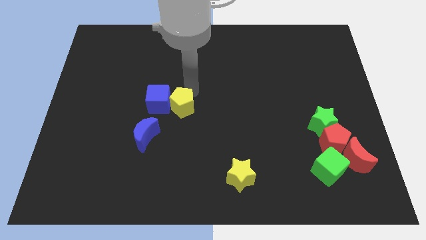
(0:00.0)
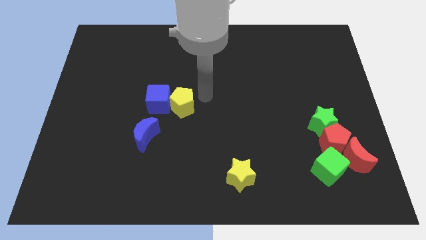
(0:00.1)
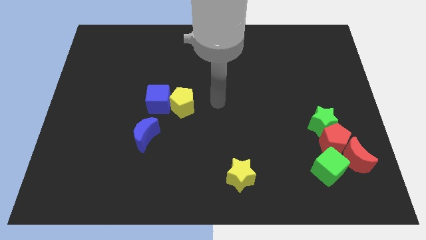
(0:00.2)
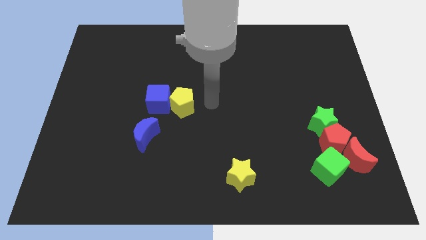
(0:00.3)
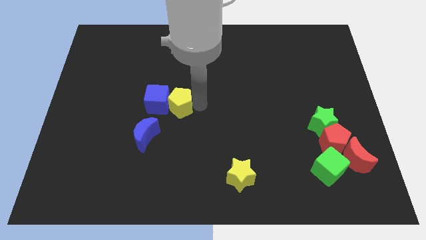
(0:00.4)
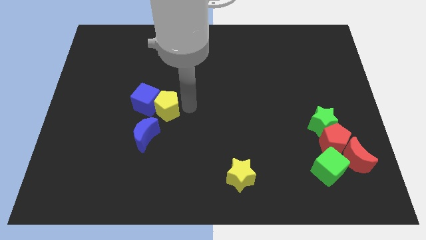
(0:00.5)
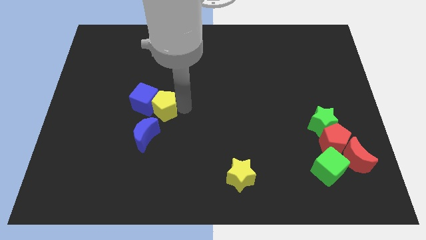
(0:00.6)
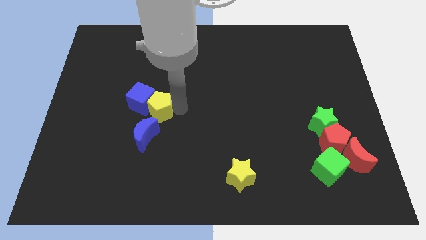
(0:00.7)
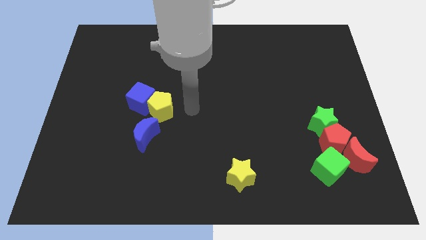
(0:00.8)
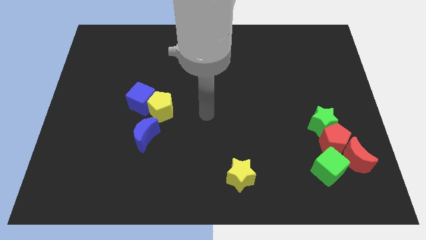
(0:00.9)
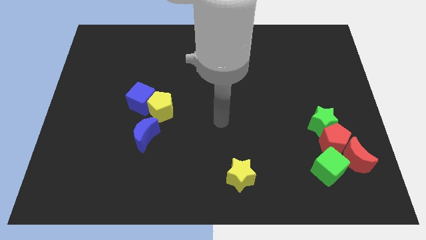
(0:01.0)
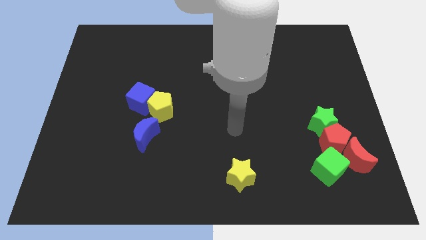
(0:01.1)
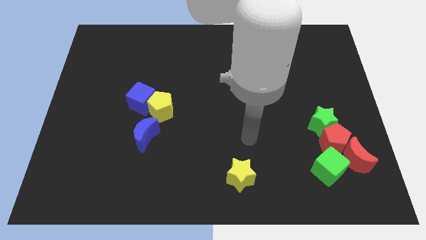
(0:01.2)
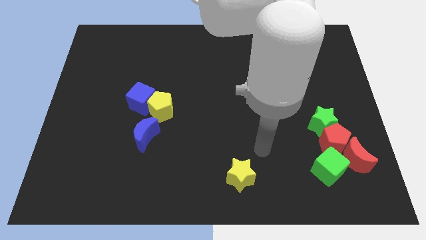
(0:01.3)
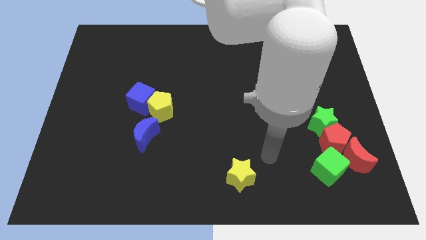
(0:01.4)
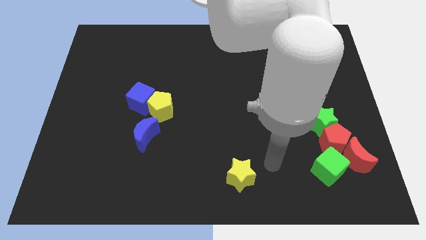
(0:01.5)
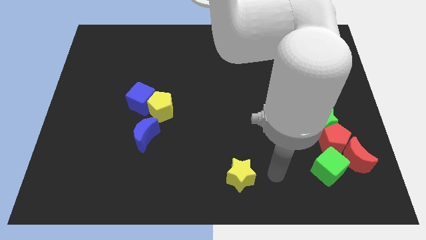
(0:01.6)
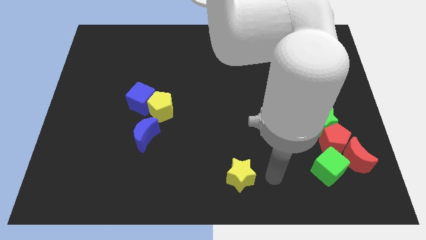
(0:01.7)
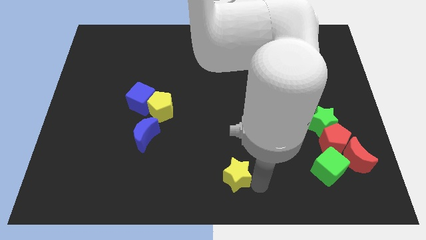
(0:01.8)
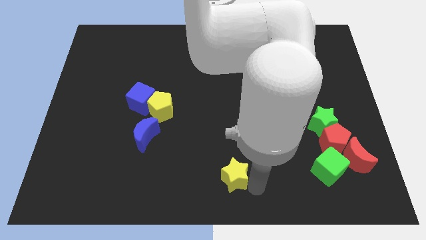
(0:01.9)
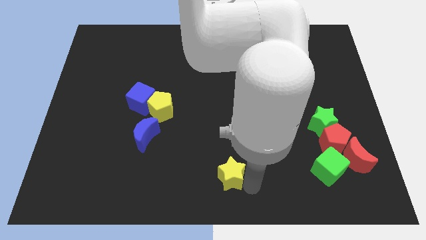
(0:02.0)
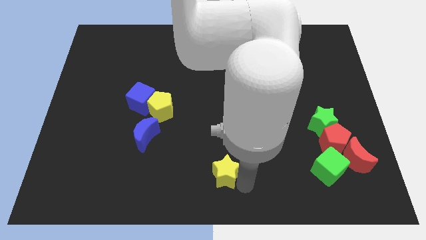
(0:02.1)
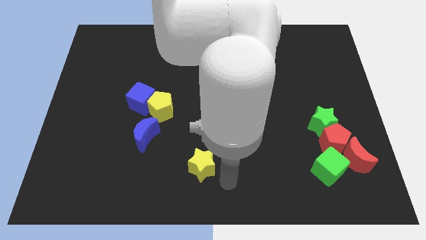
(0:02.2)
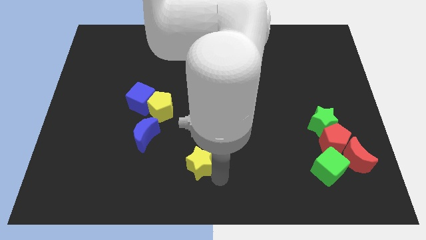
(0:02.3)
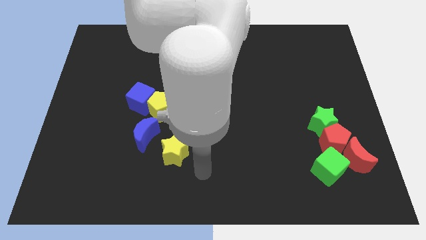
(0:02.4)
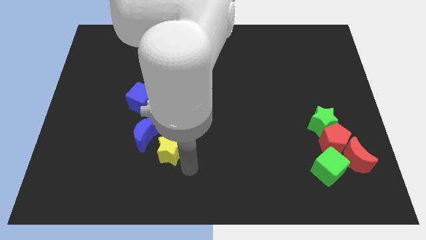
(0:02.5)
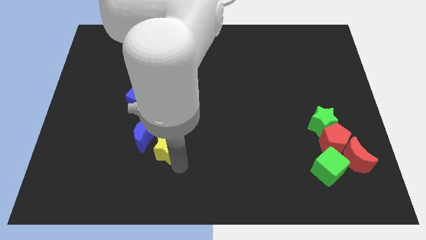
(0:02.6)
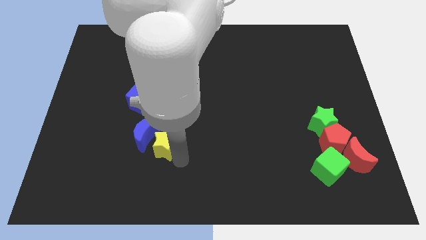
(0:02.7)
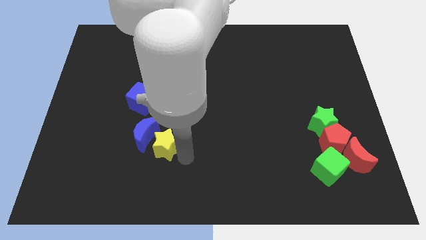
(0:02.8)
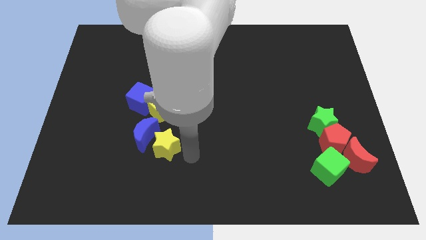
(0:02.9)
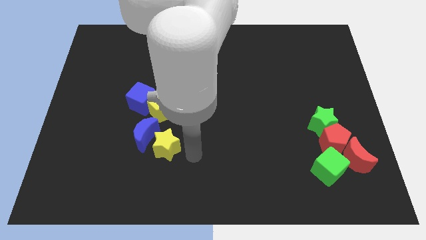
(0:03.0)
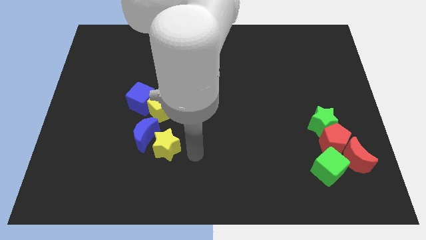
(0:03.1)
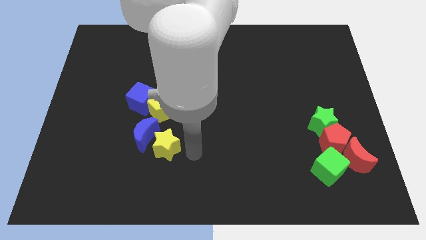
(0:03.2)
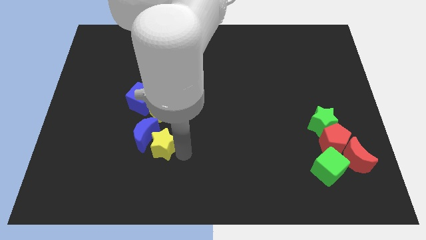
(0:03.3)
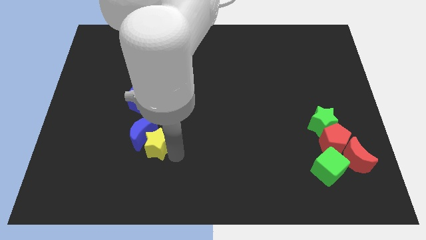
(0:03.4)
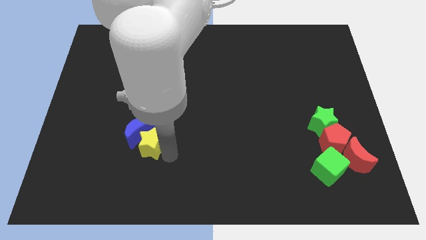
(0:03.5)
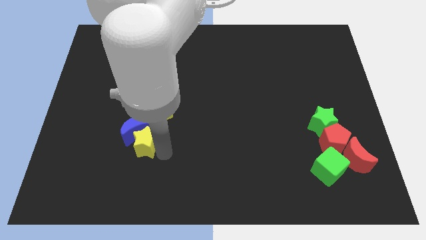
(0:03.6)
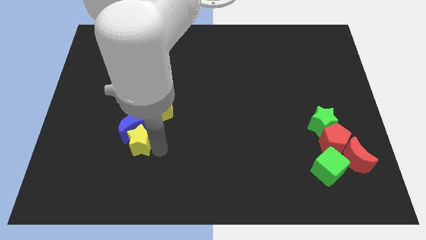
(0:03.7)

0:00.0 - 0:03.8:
push the yellow star into the blue crescent

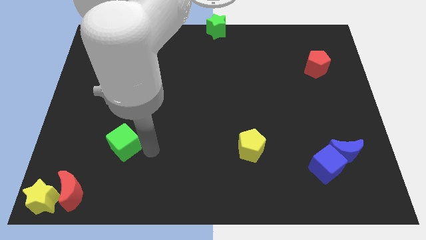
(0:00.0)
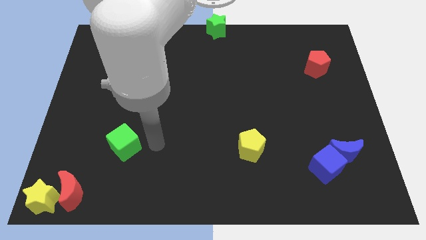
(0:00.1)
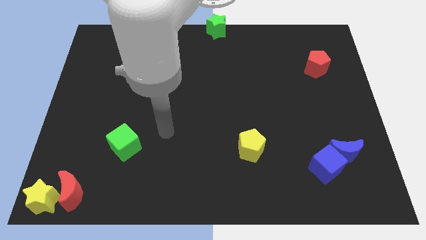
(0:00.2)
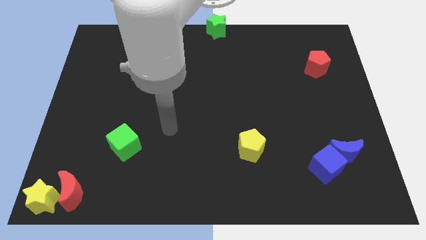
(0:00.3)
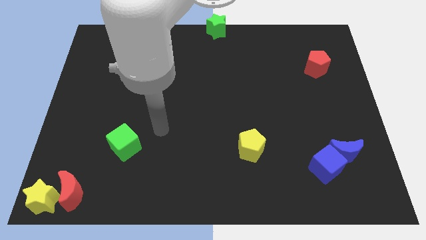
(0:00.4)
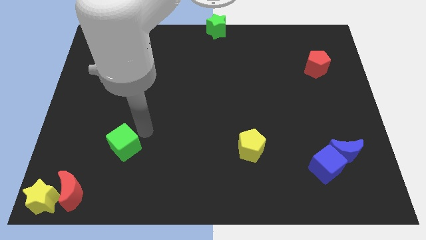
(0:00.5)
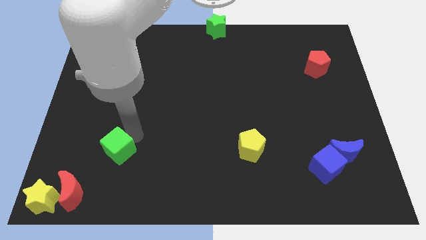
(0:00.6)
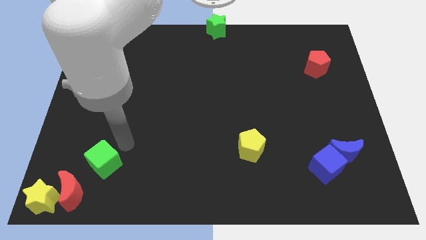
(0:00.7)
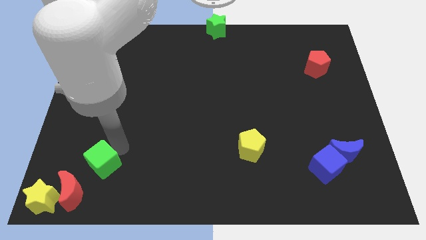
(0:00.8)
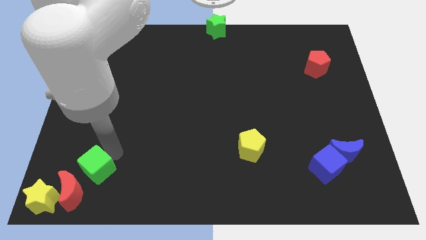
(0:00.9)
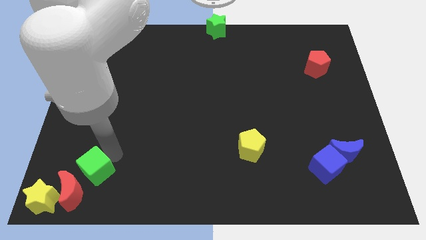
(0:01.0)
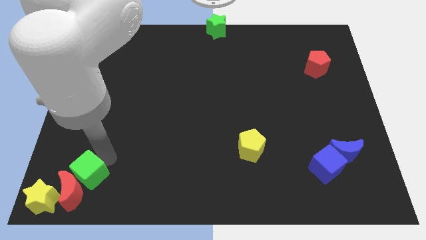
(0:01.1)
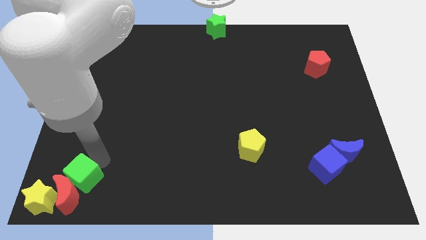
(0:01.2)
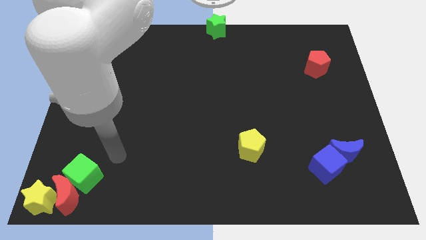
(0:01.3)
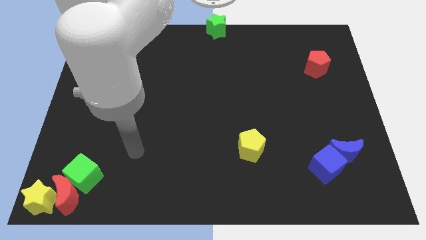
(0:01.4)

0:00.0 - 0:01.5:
move the green cube into the red crescent

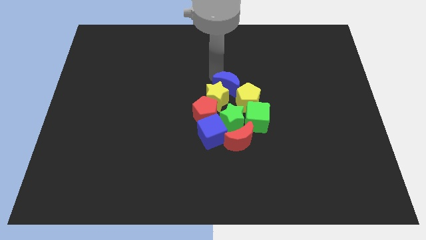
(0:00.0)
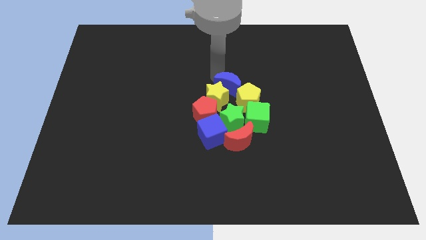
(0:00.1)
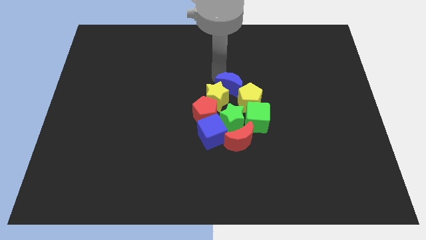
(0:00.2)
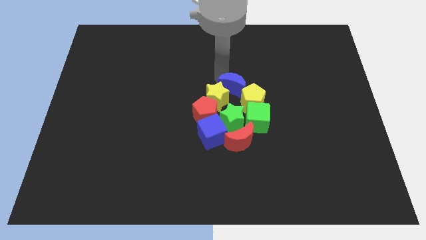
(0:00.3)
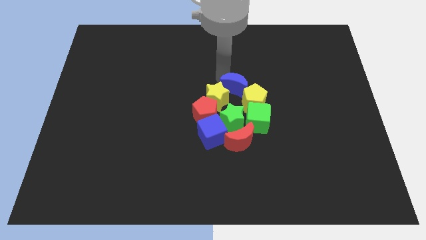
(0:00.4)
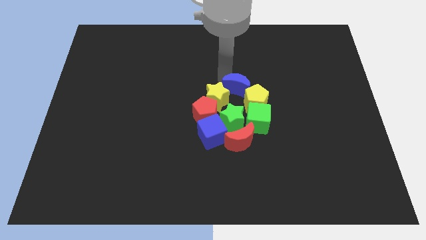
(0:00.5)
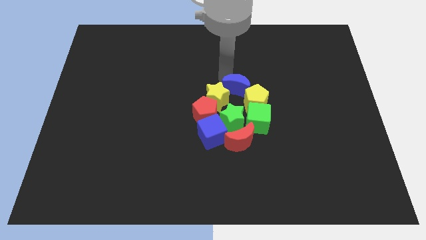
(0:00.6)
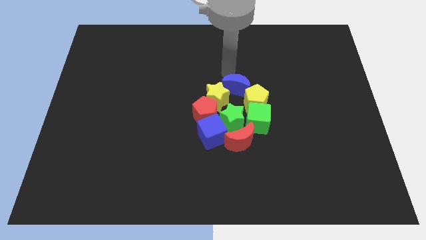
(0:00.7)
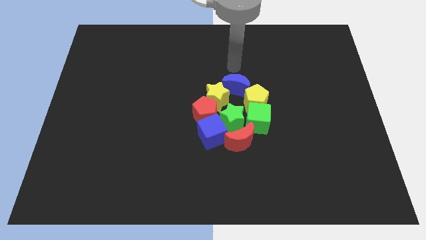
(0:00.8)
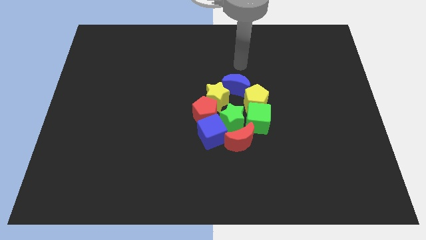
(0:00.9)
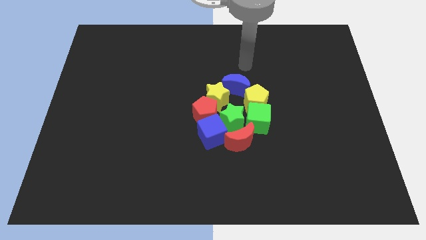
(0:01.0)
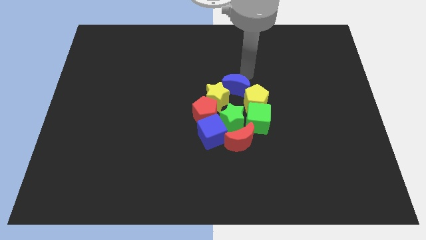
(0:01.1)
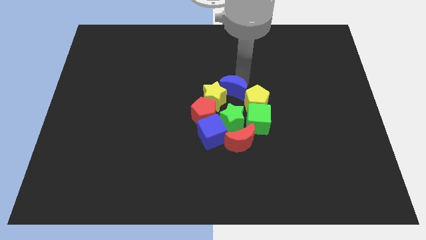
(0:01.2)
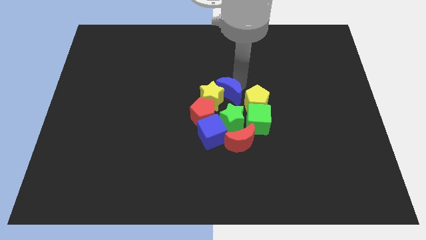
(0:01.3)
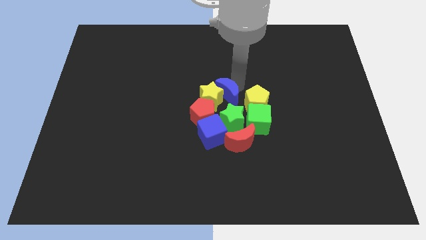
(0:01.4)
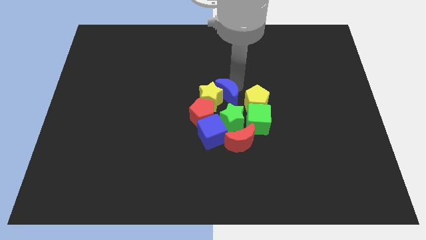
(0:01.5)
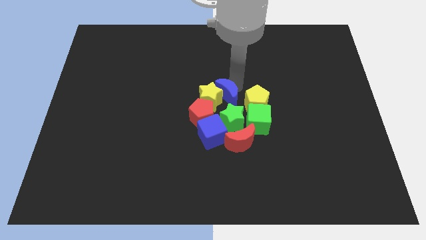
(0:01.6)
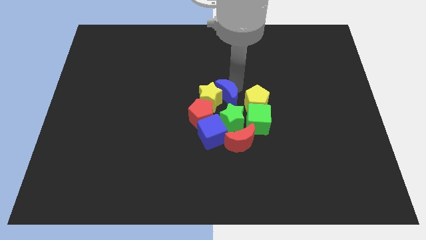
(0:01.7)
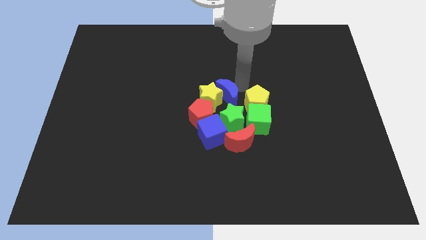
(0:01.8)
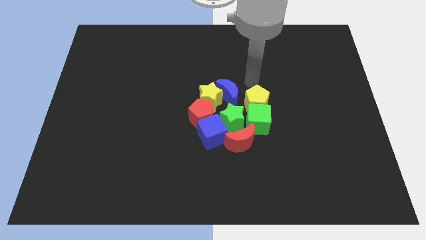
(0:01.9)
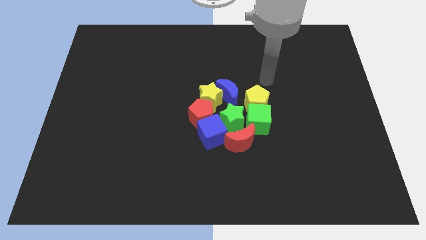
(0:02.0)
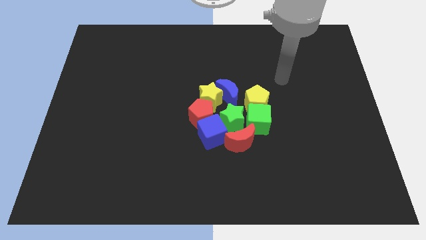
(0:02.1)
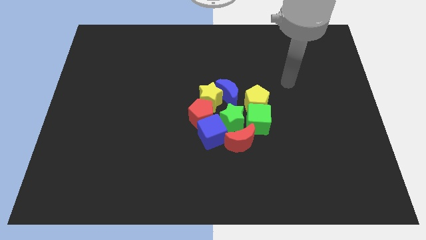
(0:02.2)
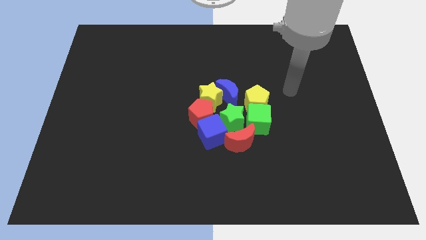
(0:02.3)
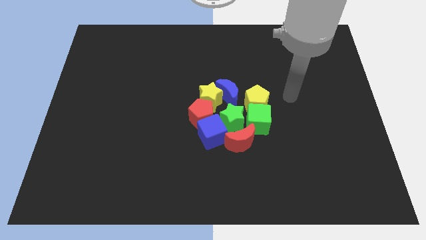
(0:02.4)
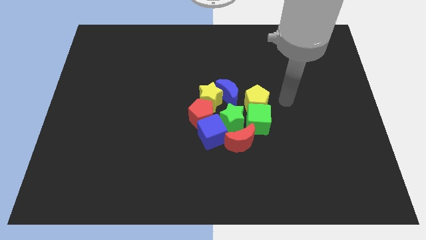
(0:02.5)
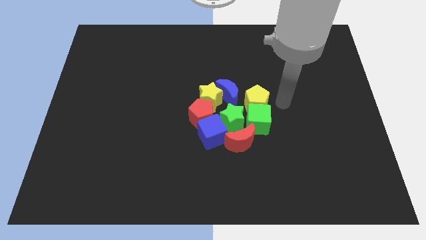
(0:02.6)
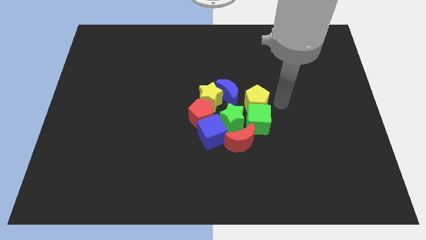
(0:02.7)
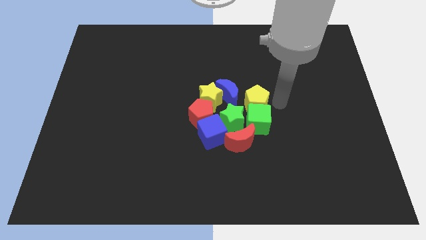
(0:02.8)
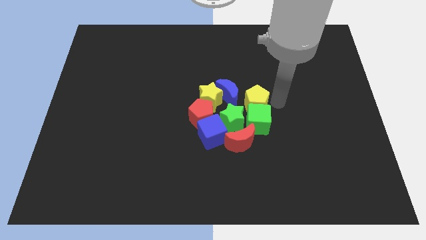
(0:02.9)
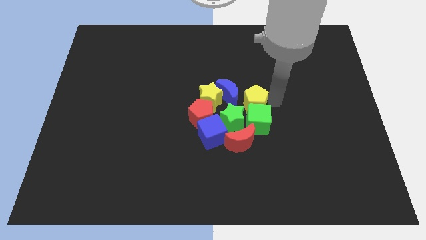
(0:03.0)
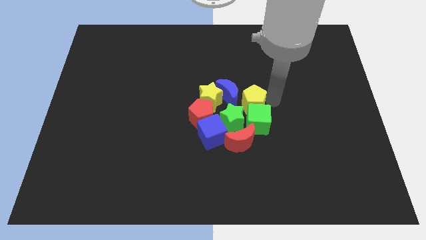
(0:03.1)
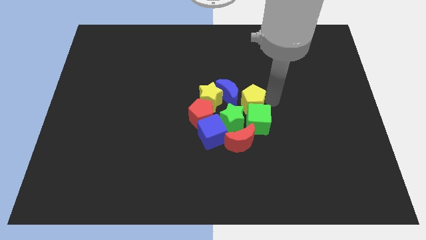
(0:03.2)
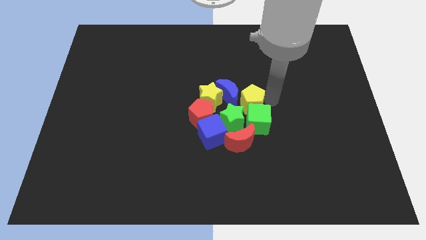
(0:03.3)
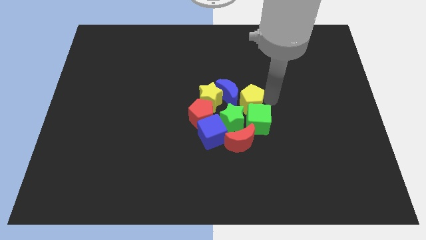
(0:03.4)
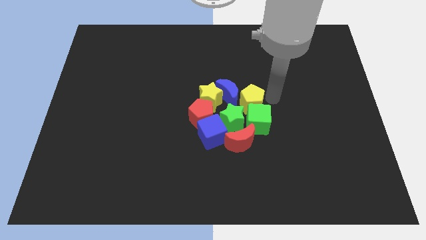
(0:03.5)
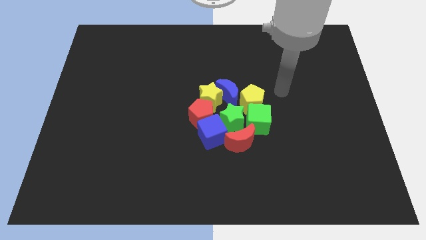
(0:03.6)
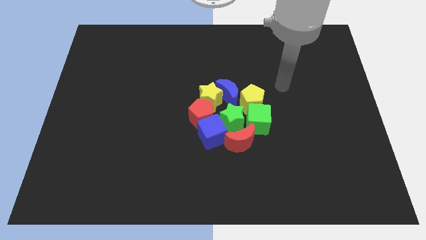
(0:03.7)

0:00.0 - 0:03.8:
move the group of objects towards the center of the board

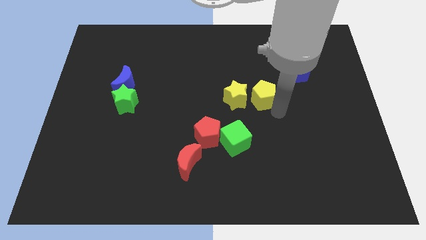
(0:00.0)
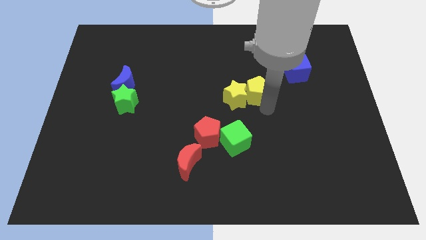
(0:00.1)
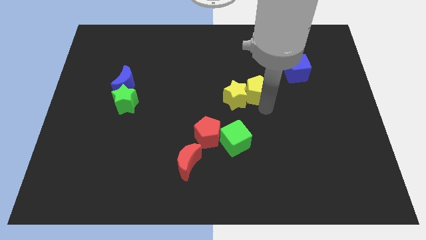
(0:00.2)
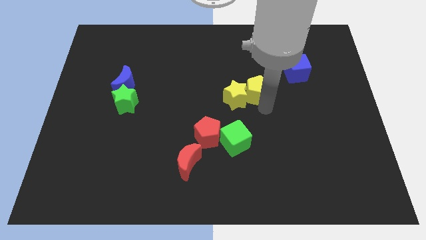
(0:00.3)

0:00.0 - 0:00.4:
place the yellow pentagon right to the yellow star
